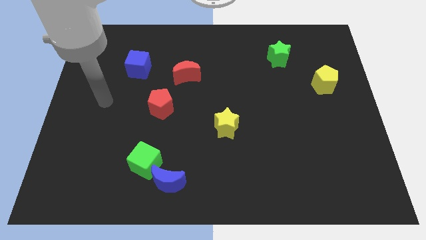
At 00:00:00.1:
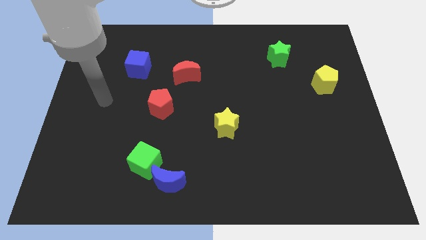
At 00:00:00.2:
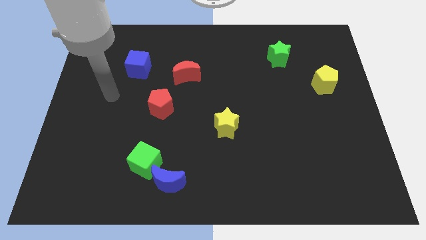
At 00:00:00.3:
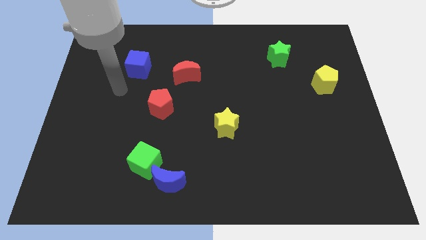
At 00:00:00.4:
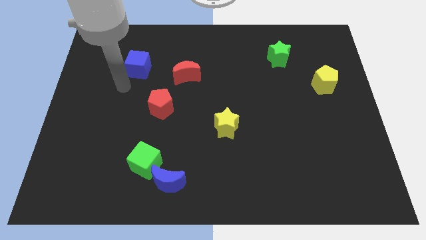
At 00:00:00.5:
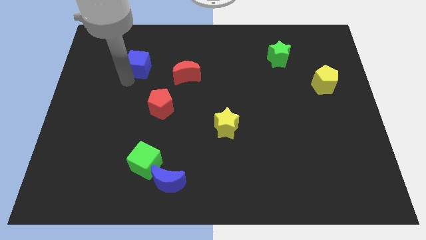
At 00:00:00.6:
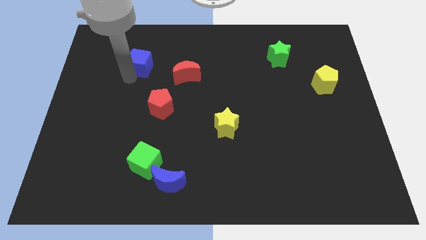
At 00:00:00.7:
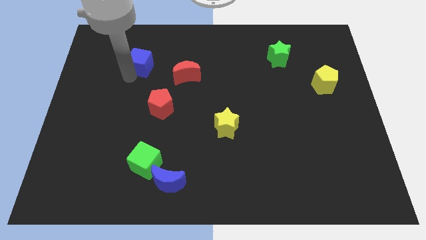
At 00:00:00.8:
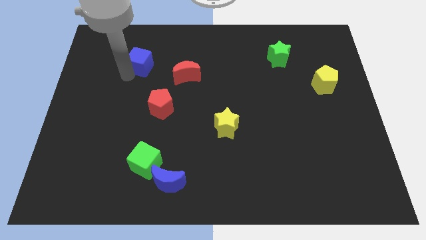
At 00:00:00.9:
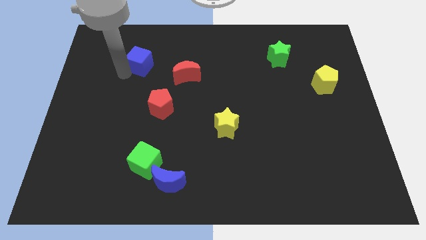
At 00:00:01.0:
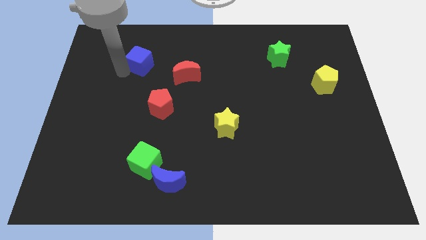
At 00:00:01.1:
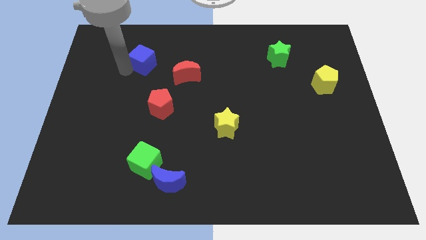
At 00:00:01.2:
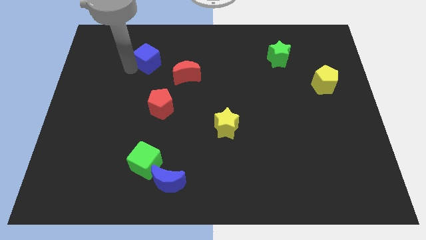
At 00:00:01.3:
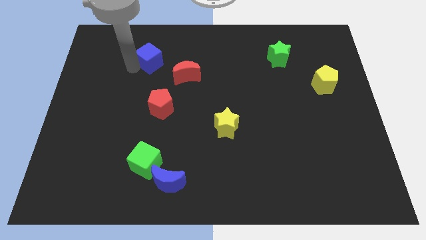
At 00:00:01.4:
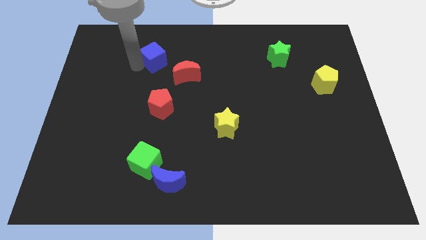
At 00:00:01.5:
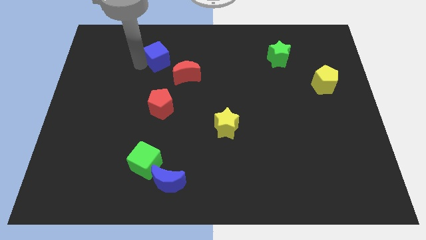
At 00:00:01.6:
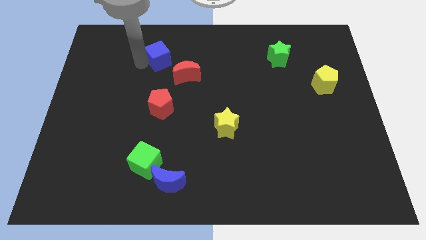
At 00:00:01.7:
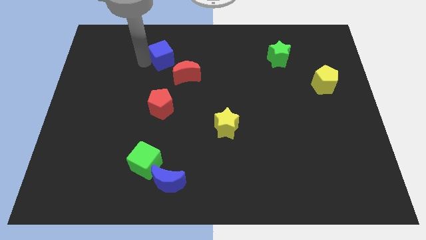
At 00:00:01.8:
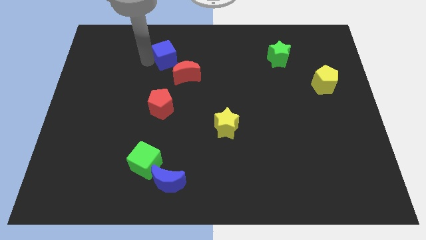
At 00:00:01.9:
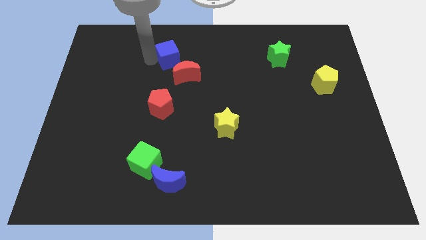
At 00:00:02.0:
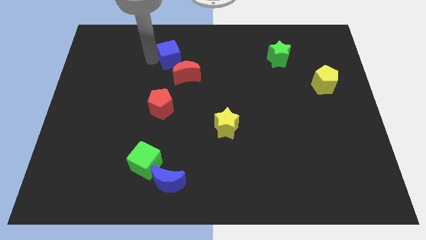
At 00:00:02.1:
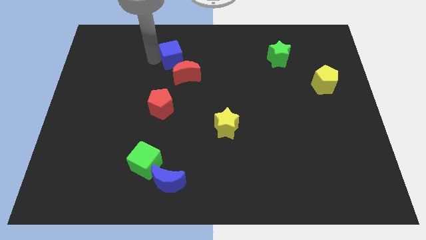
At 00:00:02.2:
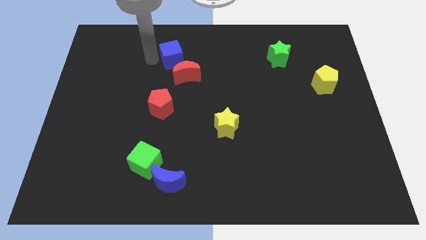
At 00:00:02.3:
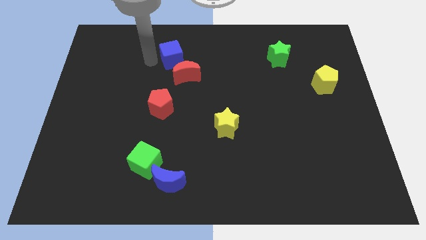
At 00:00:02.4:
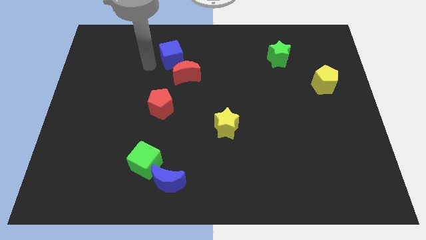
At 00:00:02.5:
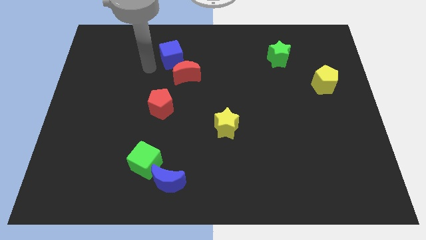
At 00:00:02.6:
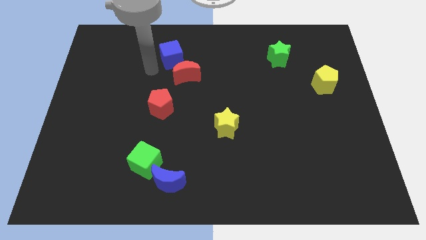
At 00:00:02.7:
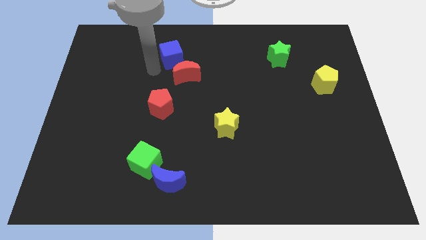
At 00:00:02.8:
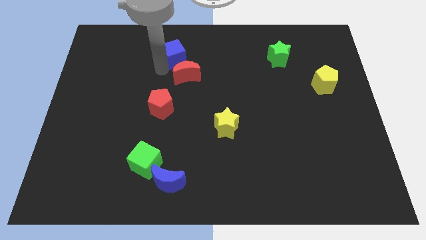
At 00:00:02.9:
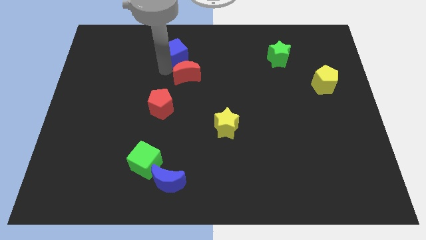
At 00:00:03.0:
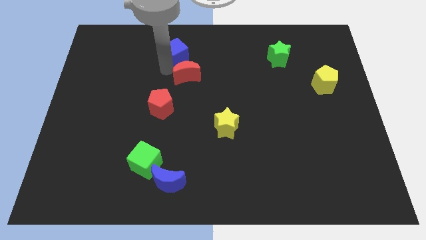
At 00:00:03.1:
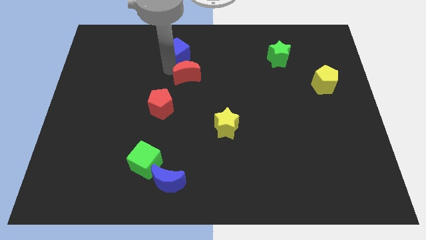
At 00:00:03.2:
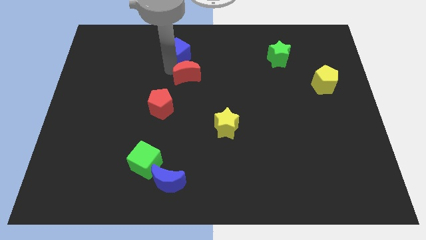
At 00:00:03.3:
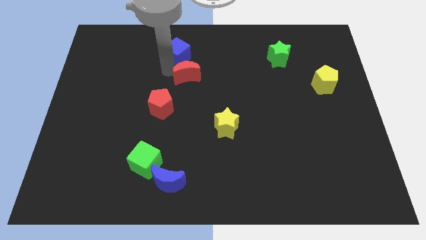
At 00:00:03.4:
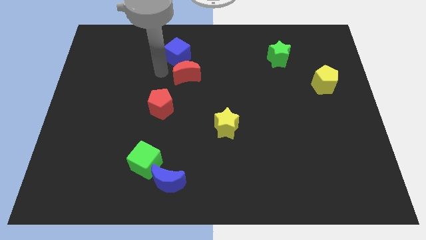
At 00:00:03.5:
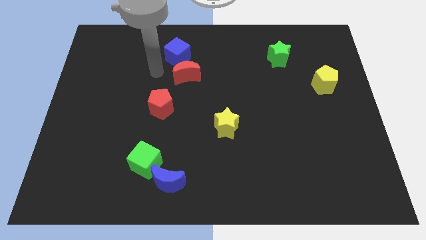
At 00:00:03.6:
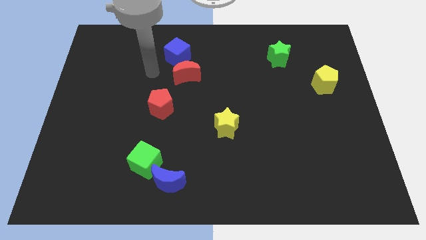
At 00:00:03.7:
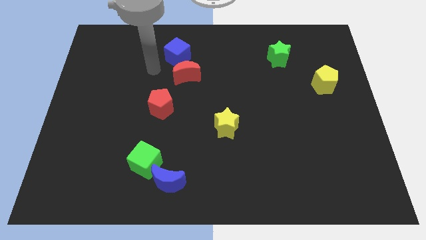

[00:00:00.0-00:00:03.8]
place the blue cube above the red crescent

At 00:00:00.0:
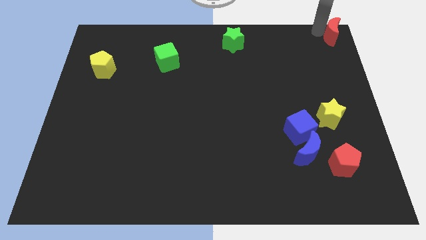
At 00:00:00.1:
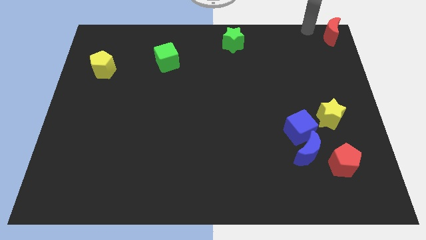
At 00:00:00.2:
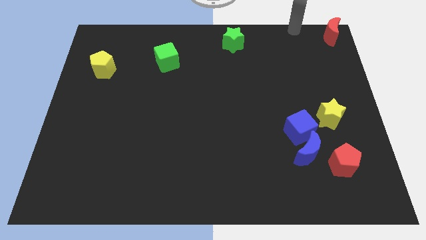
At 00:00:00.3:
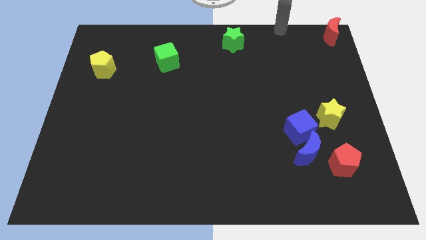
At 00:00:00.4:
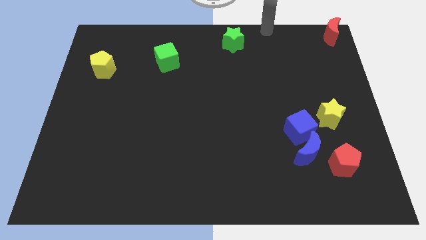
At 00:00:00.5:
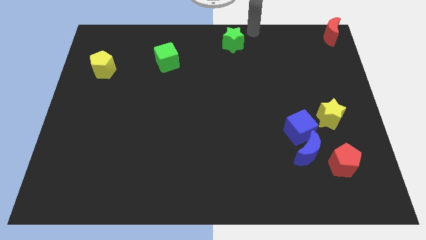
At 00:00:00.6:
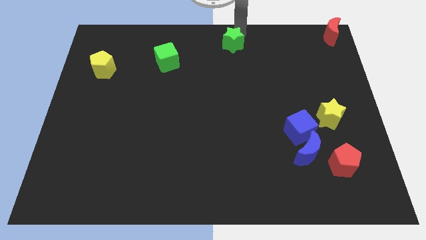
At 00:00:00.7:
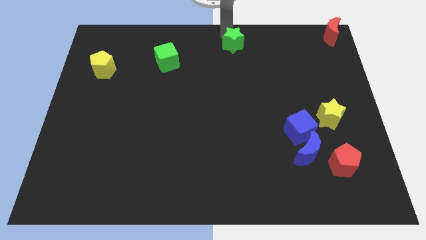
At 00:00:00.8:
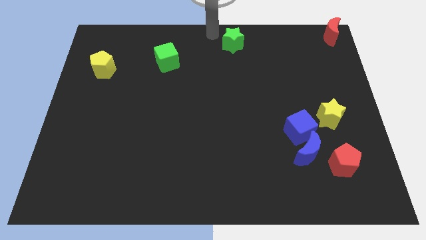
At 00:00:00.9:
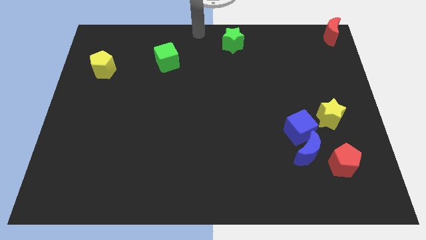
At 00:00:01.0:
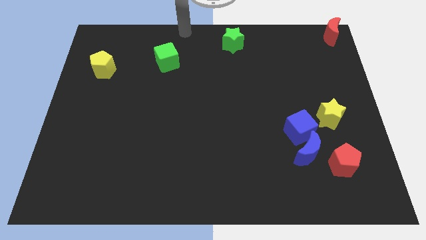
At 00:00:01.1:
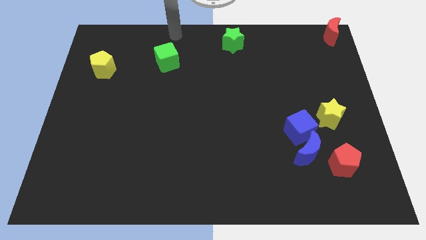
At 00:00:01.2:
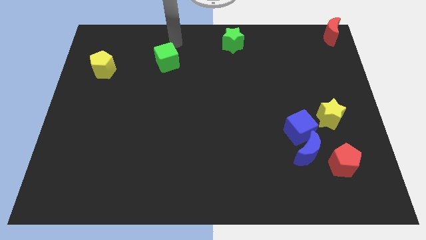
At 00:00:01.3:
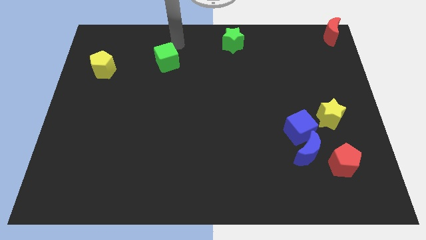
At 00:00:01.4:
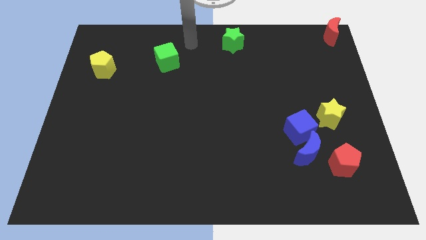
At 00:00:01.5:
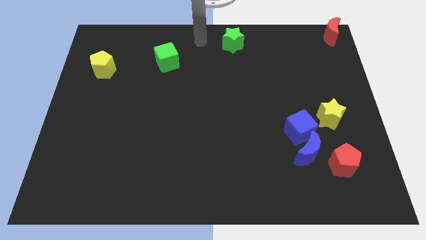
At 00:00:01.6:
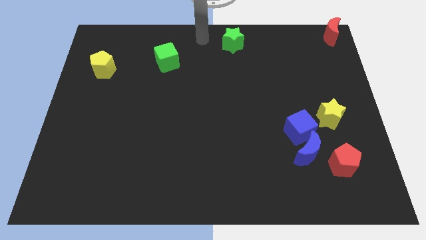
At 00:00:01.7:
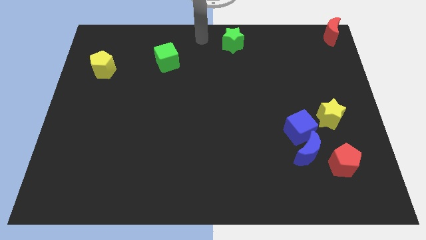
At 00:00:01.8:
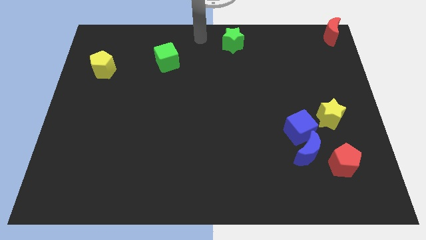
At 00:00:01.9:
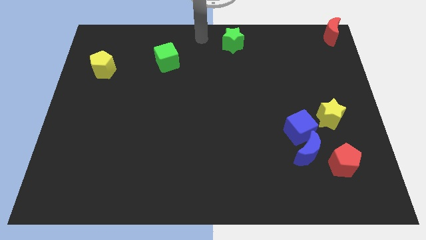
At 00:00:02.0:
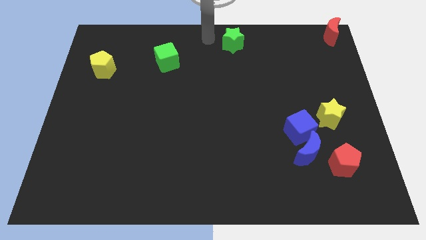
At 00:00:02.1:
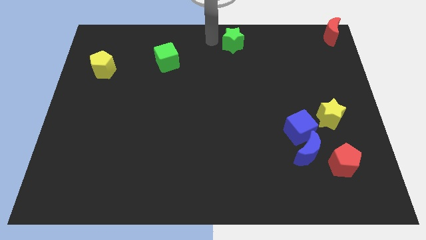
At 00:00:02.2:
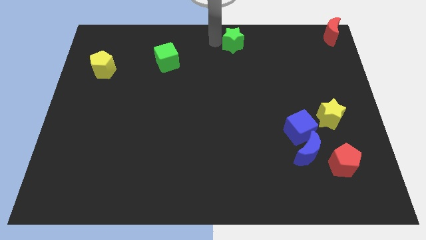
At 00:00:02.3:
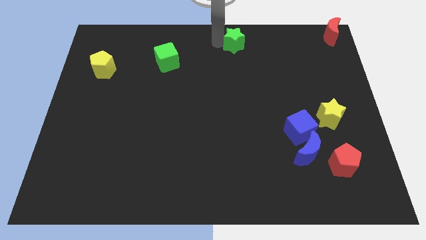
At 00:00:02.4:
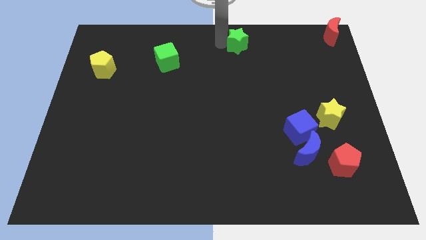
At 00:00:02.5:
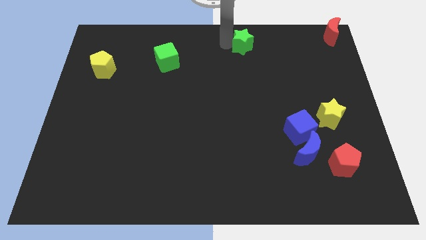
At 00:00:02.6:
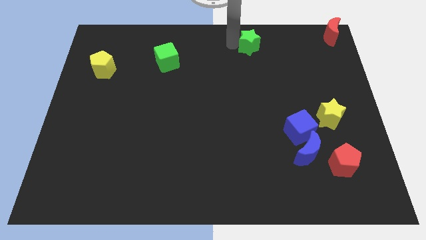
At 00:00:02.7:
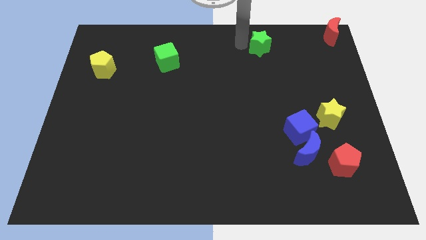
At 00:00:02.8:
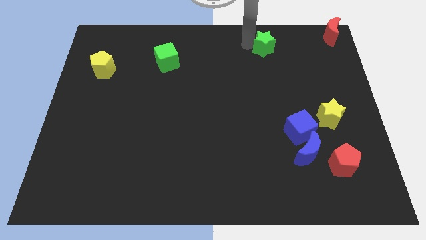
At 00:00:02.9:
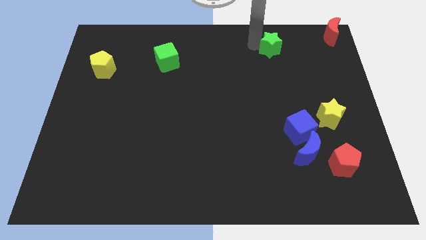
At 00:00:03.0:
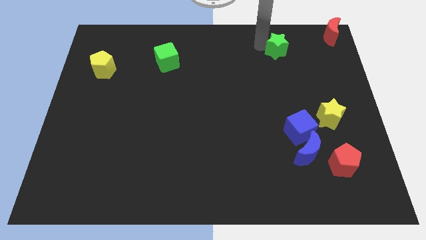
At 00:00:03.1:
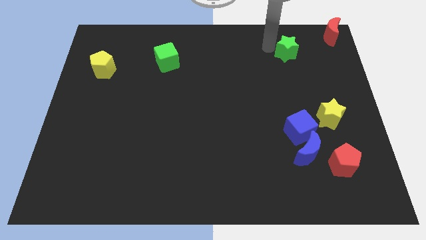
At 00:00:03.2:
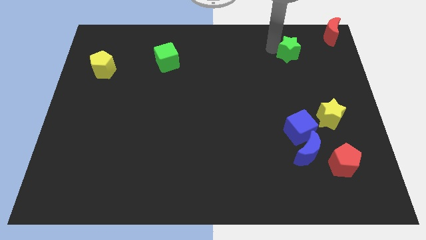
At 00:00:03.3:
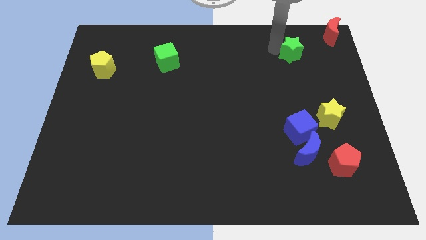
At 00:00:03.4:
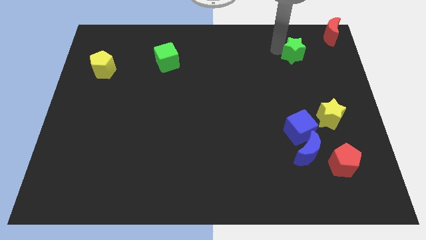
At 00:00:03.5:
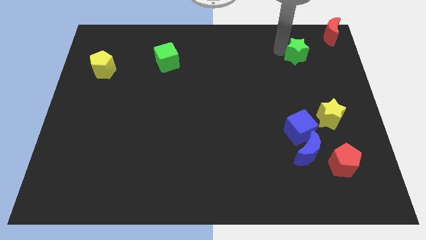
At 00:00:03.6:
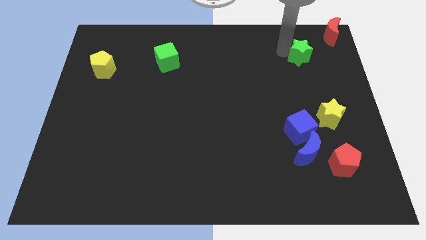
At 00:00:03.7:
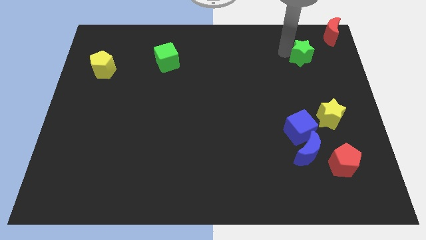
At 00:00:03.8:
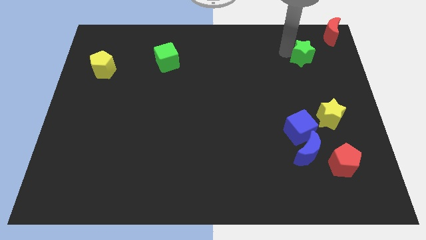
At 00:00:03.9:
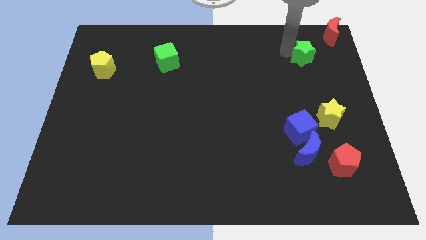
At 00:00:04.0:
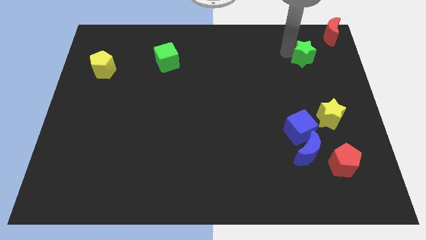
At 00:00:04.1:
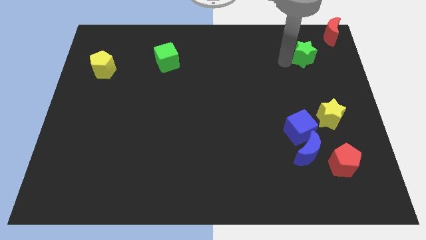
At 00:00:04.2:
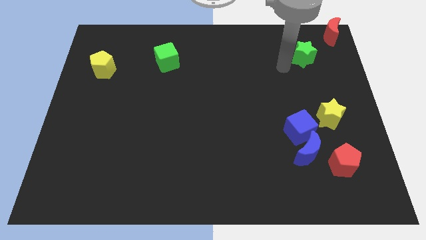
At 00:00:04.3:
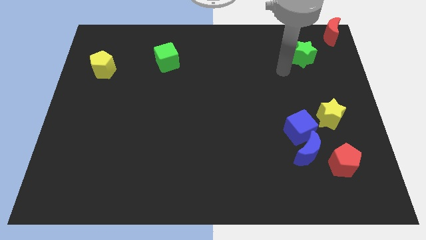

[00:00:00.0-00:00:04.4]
move the green star towards the right of the board

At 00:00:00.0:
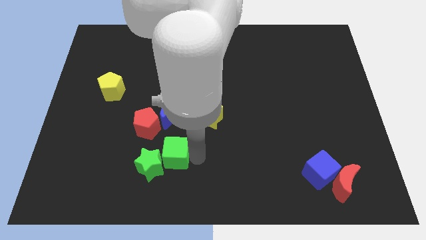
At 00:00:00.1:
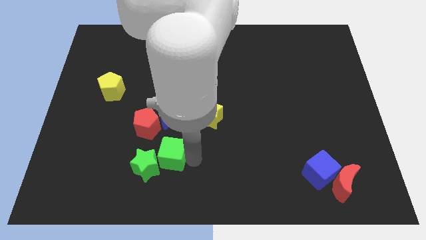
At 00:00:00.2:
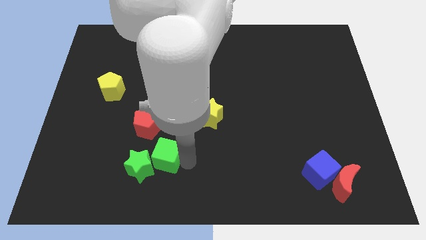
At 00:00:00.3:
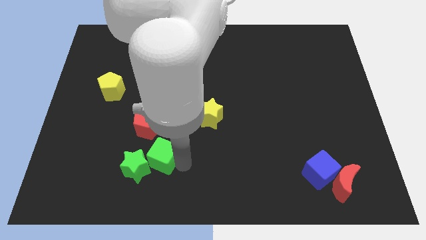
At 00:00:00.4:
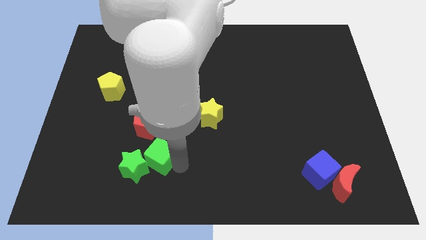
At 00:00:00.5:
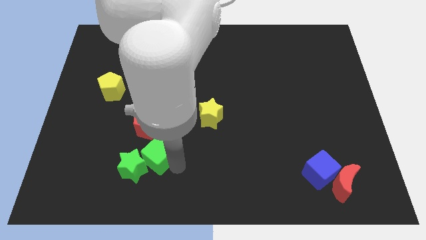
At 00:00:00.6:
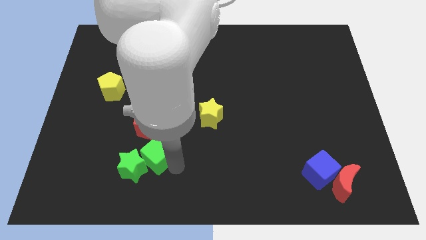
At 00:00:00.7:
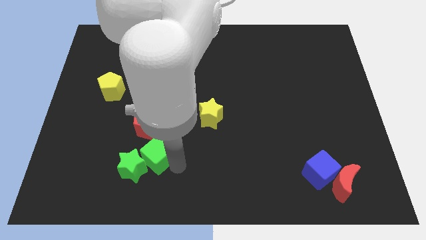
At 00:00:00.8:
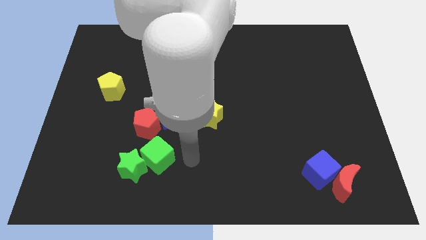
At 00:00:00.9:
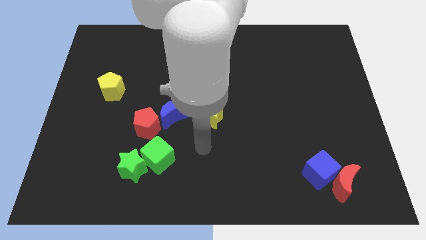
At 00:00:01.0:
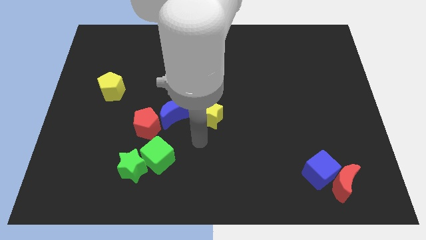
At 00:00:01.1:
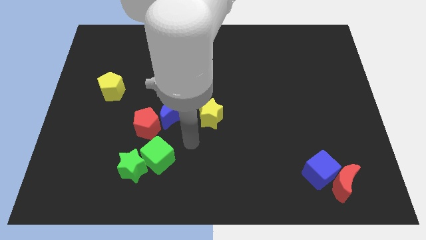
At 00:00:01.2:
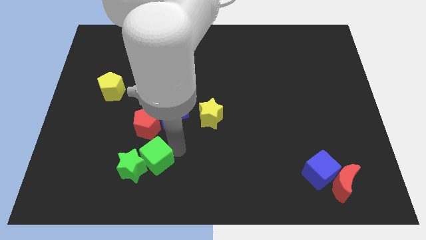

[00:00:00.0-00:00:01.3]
move your arm away from green cube
